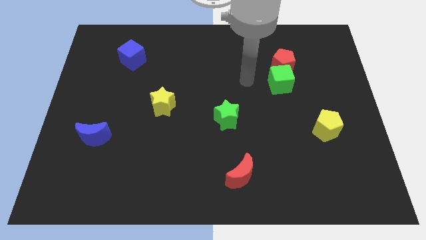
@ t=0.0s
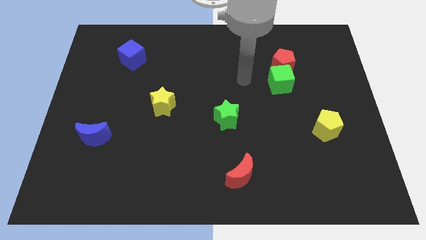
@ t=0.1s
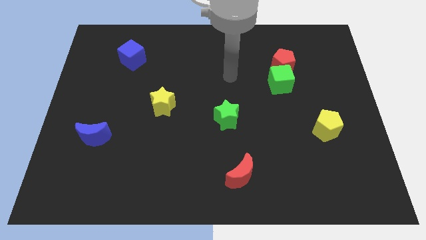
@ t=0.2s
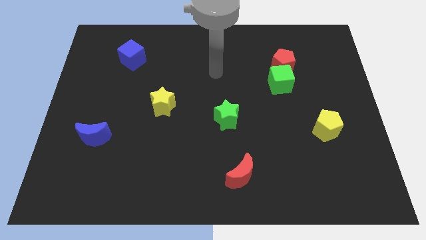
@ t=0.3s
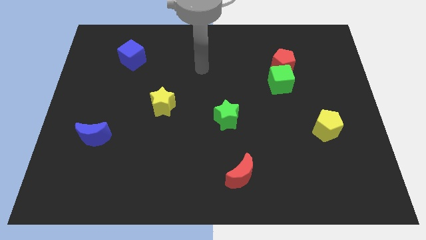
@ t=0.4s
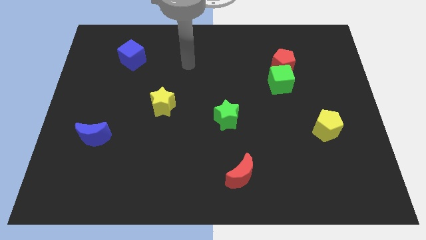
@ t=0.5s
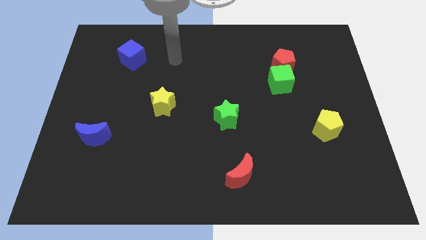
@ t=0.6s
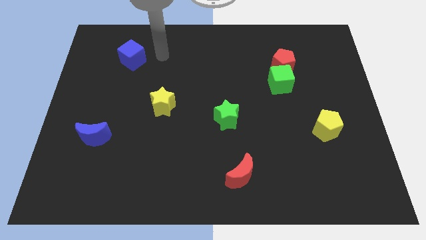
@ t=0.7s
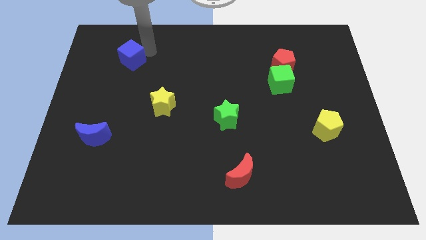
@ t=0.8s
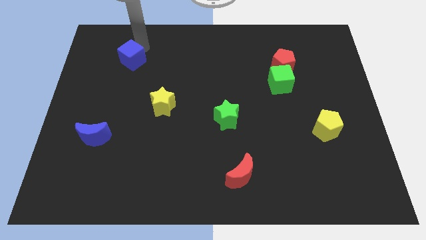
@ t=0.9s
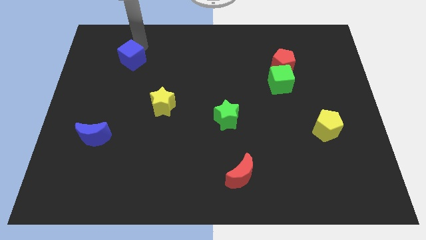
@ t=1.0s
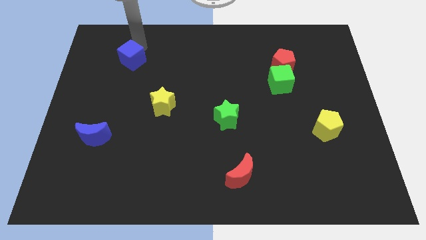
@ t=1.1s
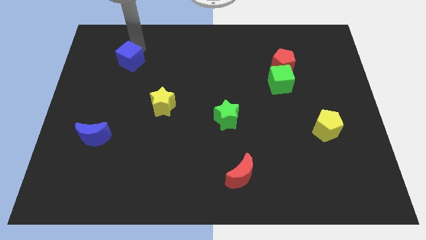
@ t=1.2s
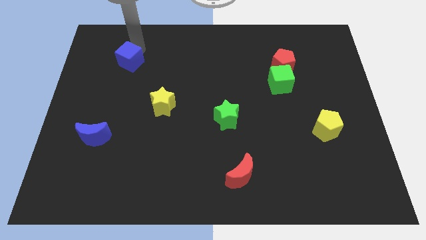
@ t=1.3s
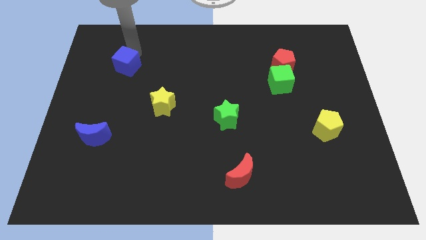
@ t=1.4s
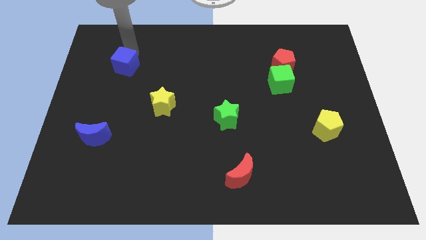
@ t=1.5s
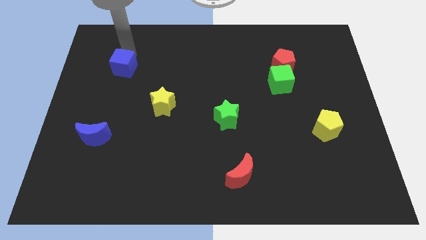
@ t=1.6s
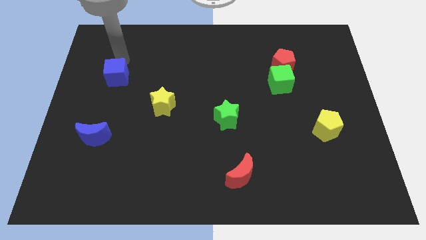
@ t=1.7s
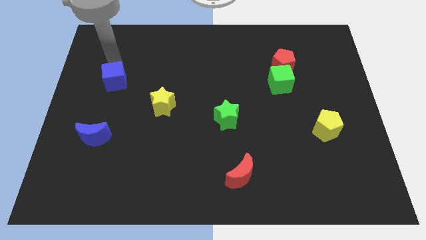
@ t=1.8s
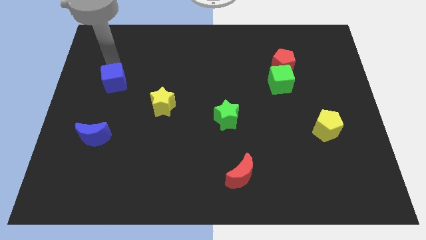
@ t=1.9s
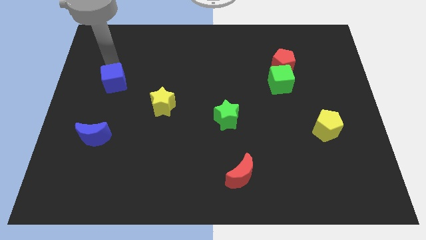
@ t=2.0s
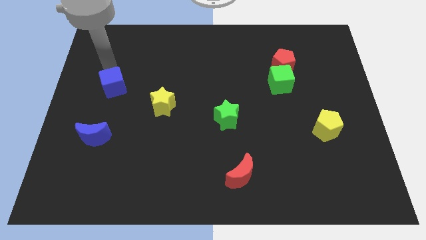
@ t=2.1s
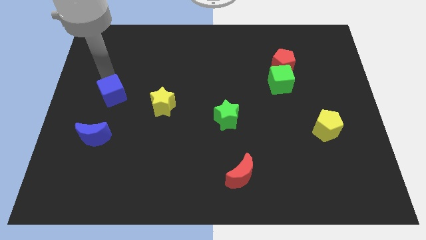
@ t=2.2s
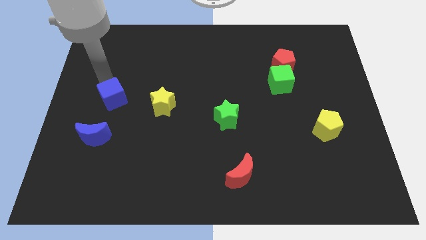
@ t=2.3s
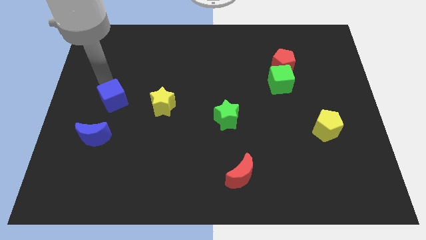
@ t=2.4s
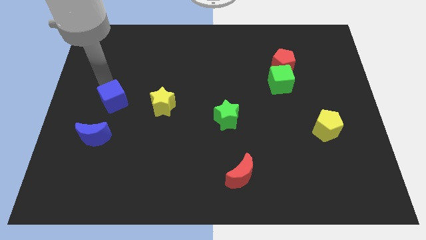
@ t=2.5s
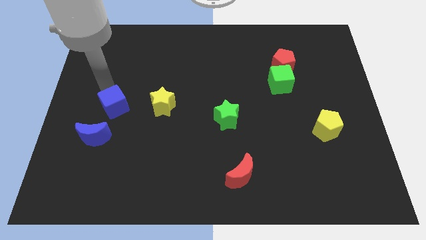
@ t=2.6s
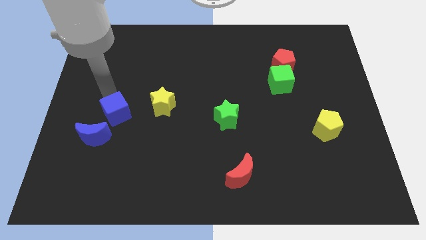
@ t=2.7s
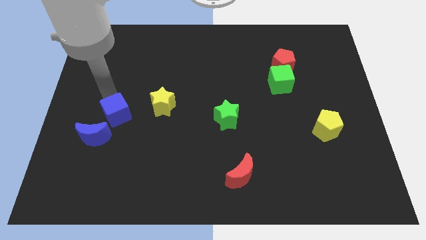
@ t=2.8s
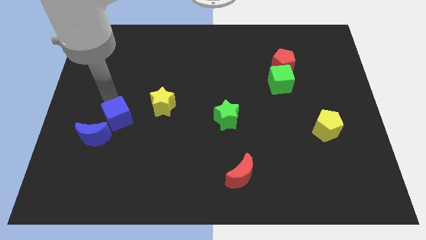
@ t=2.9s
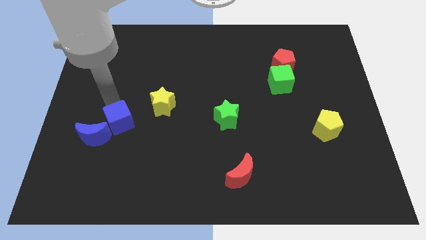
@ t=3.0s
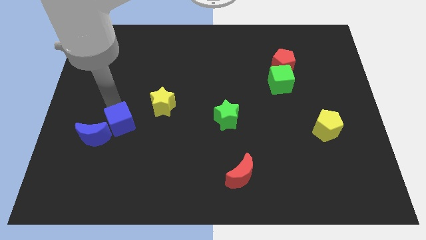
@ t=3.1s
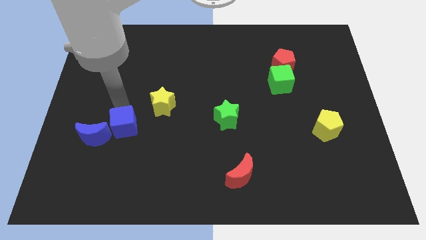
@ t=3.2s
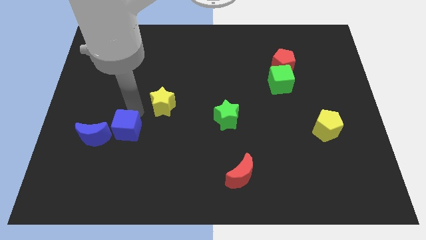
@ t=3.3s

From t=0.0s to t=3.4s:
place the blue cube right to the blue moon

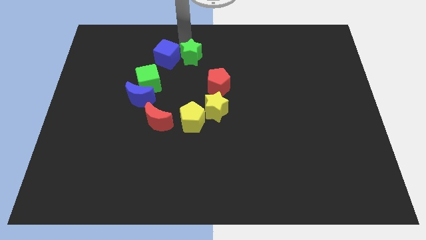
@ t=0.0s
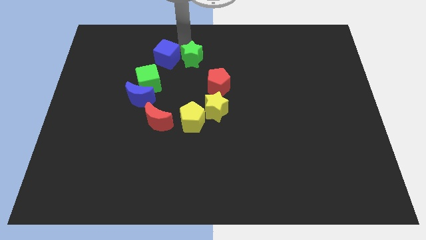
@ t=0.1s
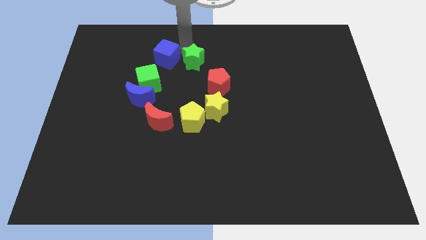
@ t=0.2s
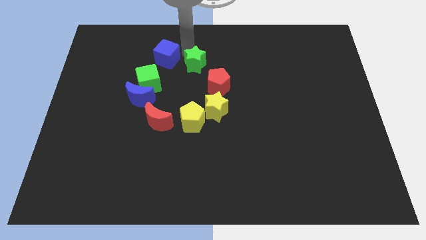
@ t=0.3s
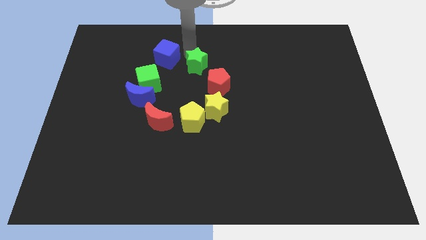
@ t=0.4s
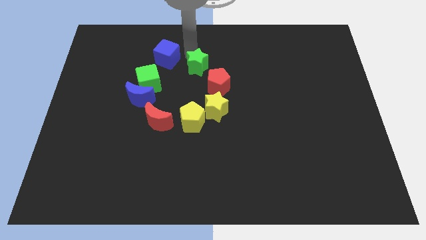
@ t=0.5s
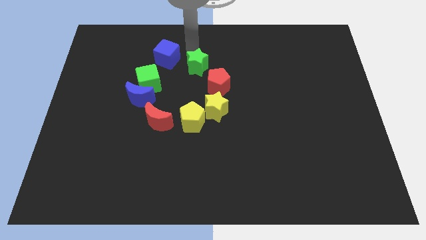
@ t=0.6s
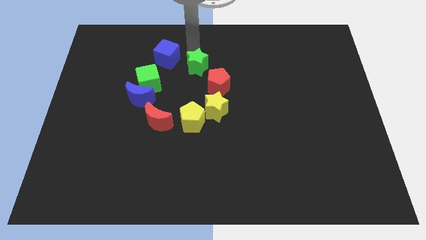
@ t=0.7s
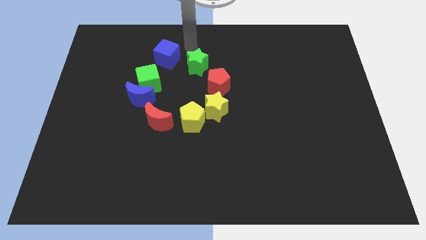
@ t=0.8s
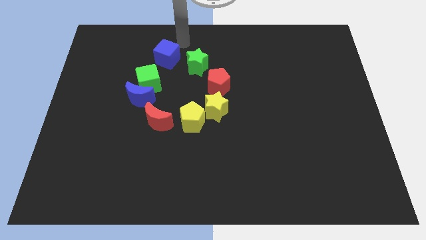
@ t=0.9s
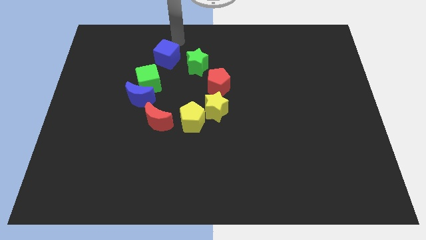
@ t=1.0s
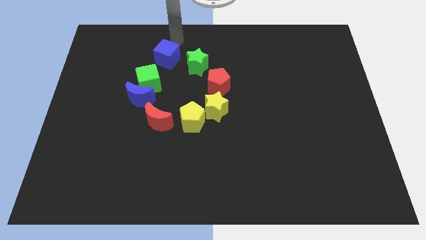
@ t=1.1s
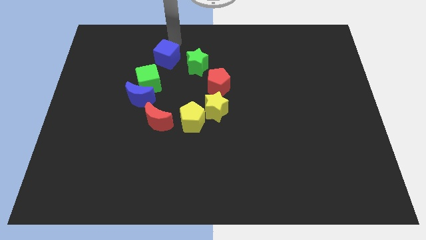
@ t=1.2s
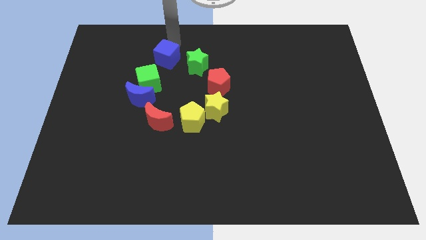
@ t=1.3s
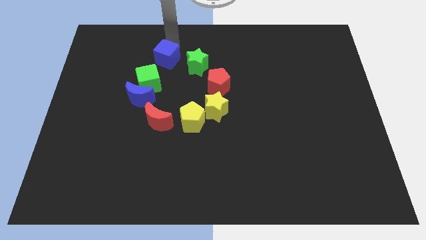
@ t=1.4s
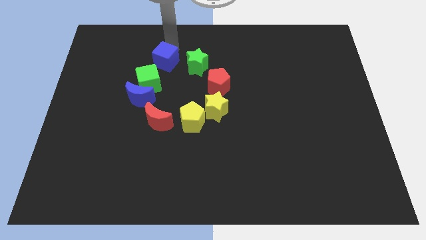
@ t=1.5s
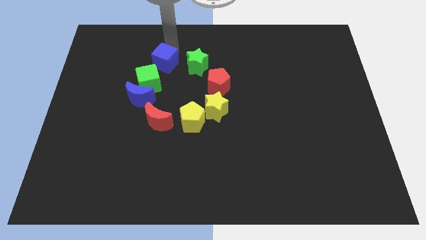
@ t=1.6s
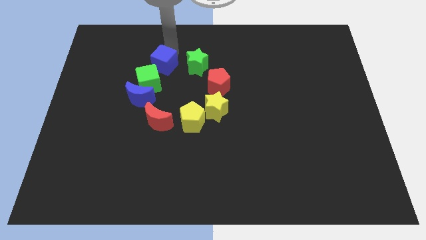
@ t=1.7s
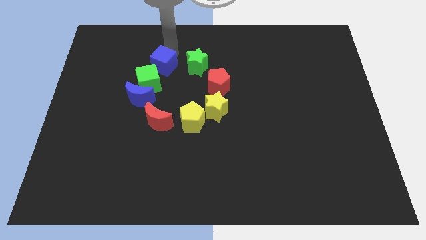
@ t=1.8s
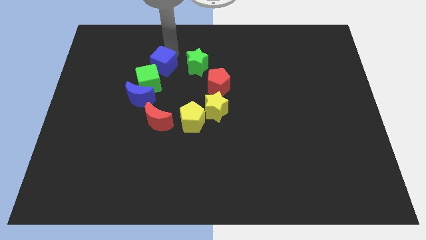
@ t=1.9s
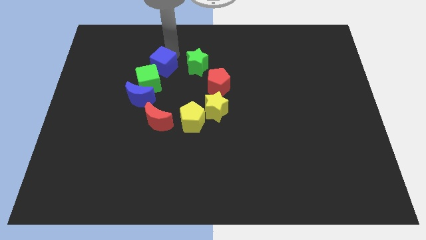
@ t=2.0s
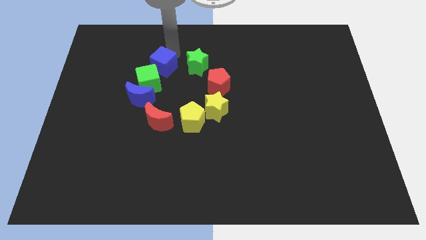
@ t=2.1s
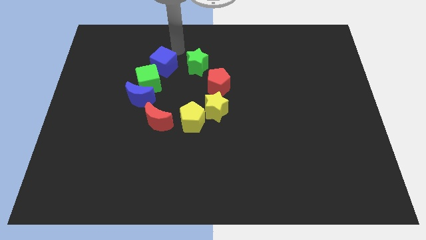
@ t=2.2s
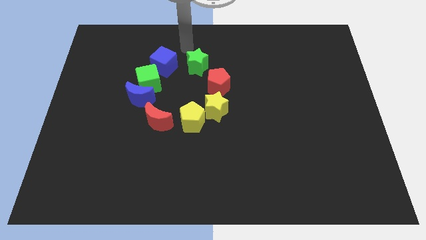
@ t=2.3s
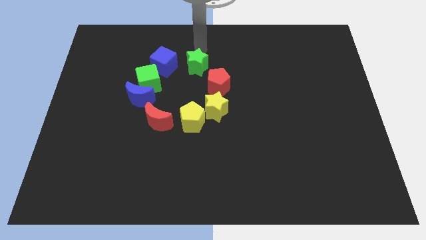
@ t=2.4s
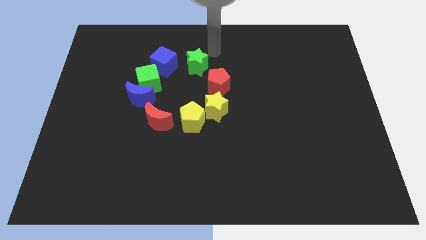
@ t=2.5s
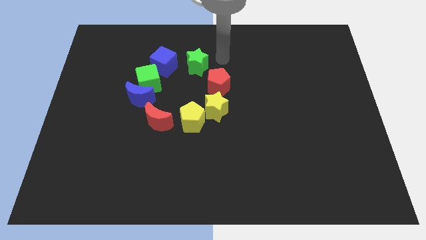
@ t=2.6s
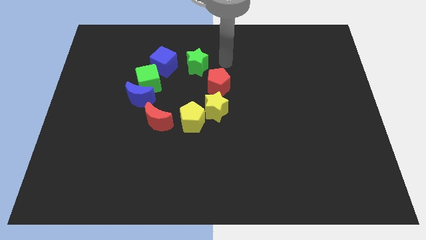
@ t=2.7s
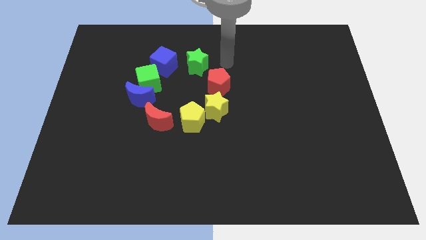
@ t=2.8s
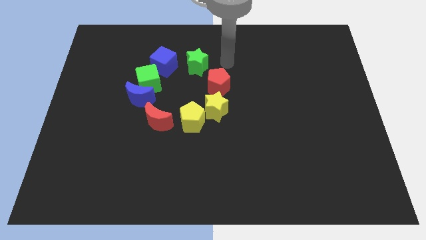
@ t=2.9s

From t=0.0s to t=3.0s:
push the green star and the blue cube slightly to the bottom

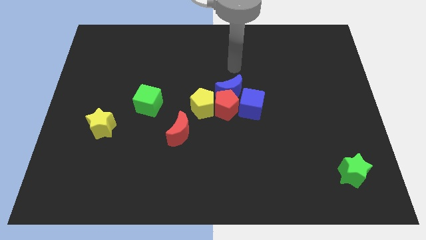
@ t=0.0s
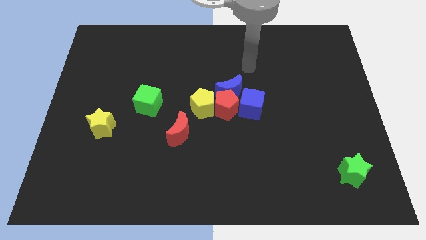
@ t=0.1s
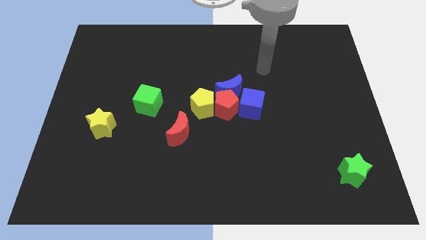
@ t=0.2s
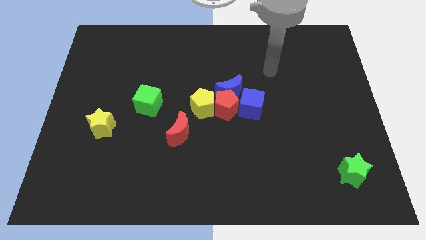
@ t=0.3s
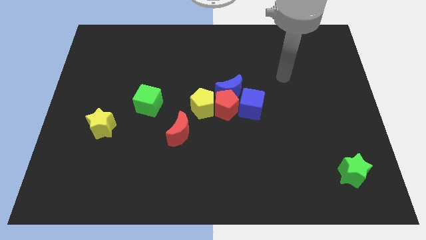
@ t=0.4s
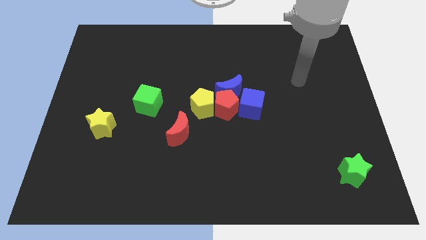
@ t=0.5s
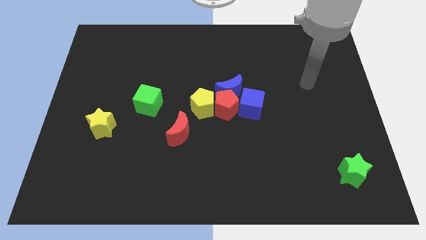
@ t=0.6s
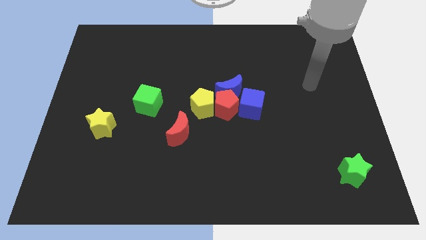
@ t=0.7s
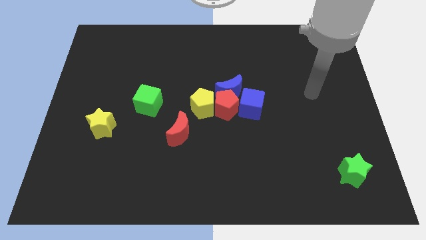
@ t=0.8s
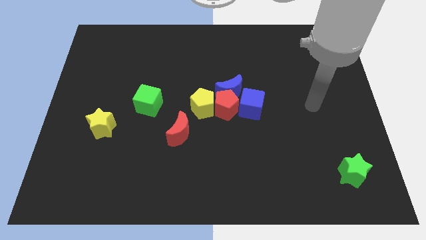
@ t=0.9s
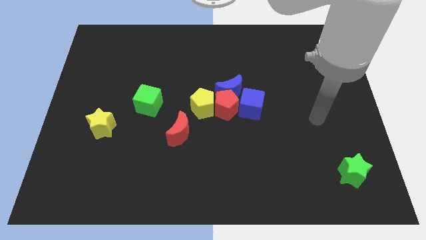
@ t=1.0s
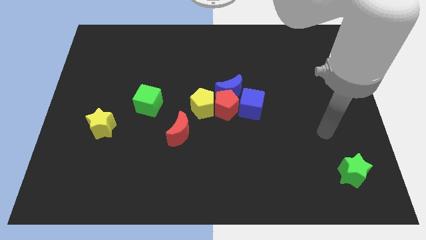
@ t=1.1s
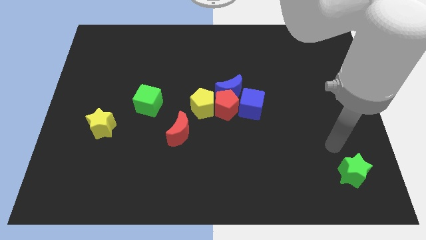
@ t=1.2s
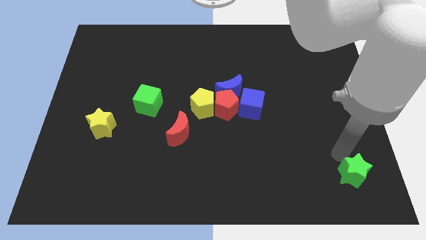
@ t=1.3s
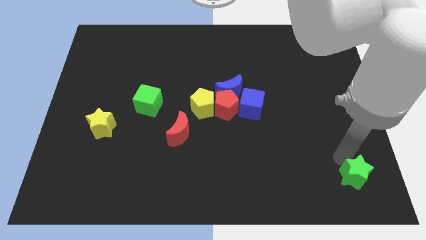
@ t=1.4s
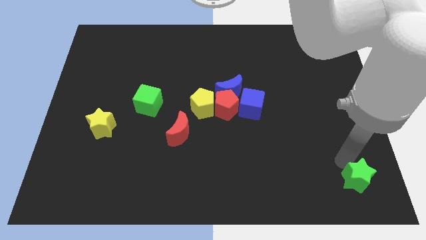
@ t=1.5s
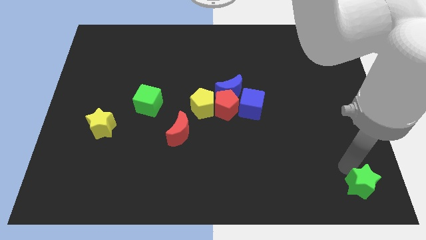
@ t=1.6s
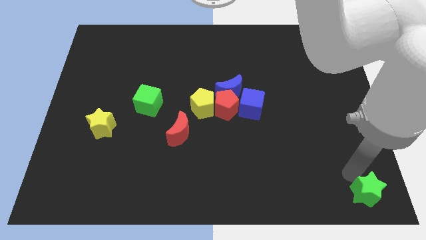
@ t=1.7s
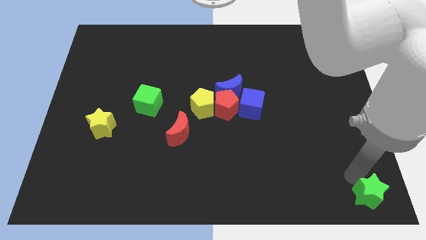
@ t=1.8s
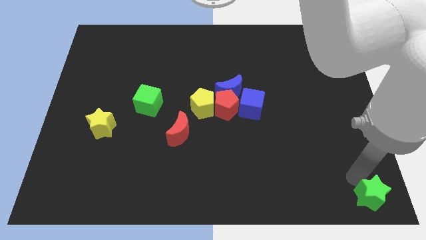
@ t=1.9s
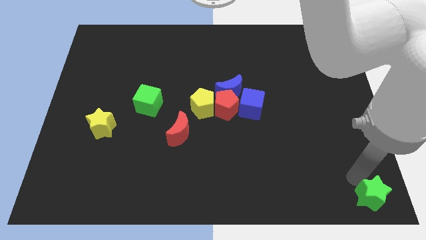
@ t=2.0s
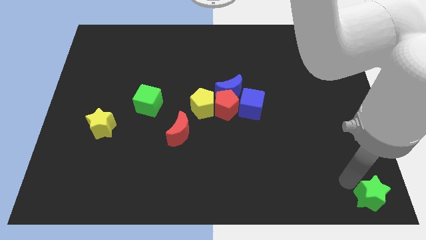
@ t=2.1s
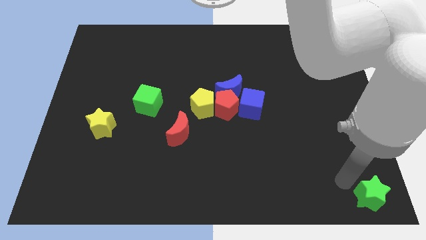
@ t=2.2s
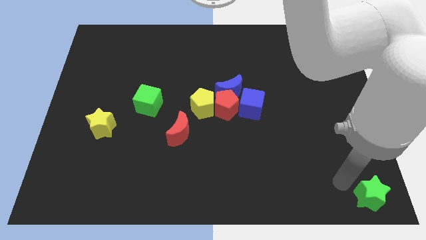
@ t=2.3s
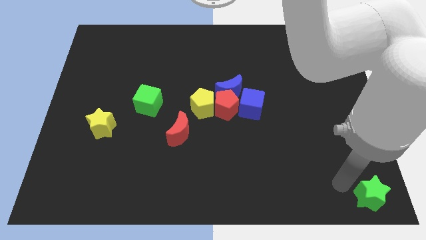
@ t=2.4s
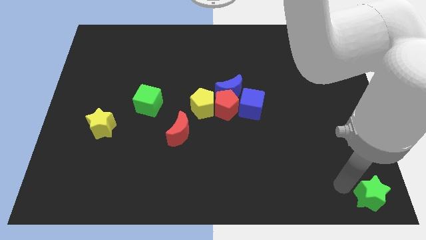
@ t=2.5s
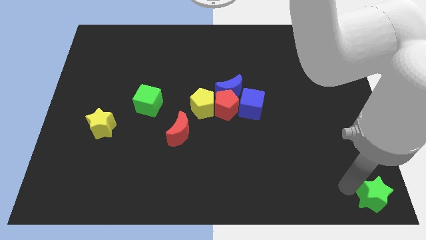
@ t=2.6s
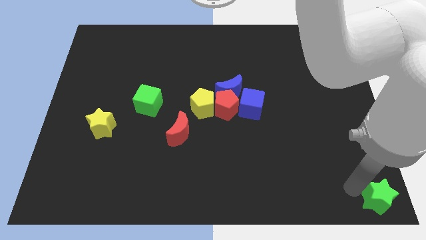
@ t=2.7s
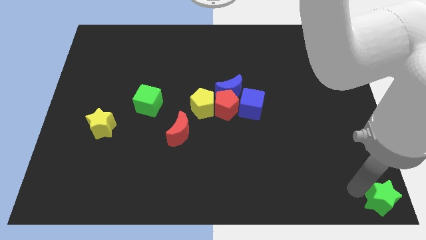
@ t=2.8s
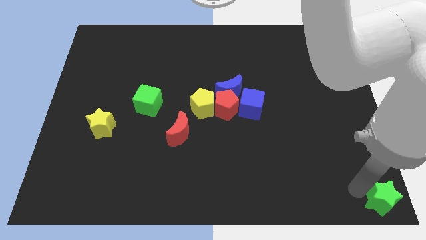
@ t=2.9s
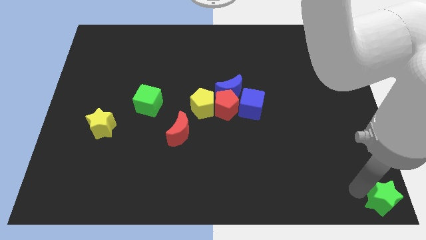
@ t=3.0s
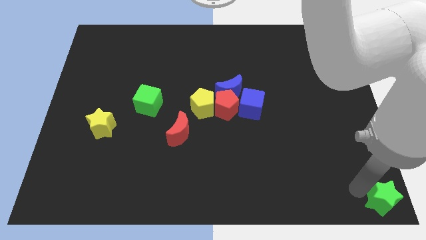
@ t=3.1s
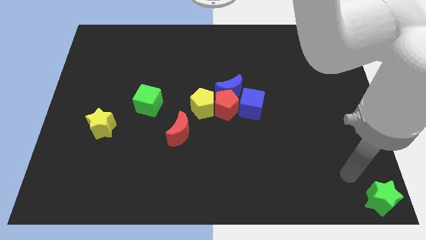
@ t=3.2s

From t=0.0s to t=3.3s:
move the green star to the bottom right corner
